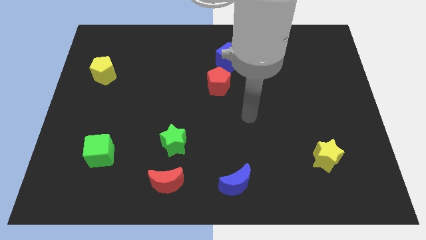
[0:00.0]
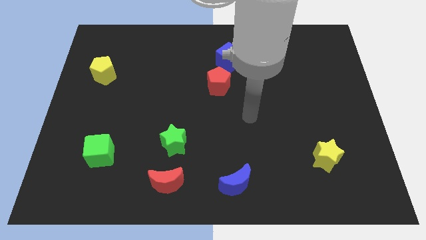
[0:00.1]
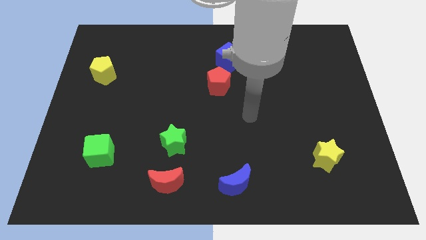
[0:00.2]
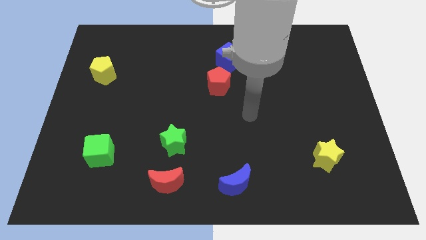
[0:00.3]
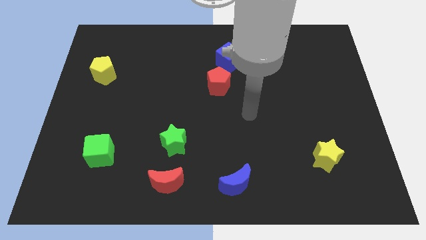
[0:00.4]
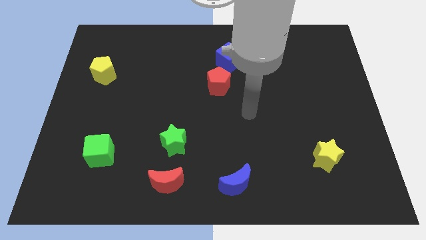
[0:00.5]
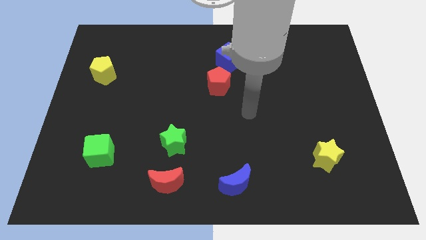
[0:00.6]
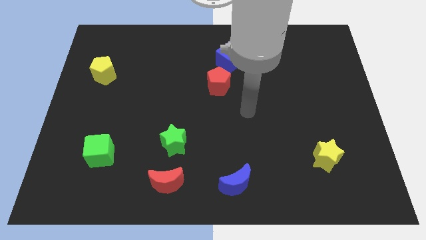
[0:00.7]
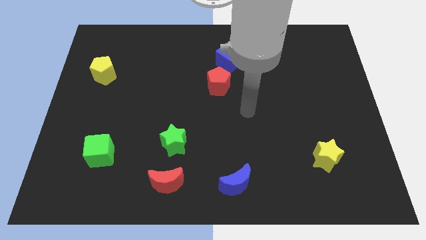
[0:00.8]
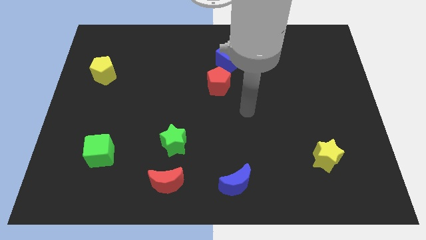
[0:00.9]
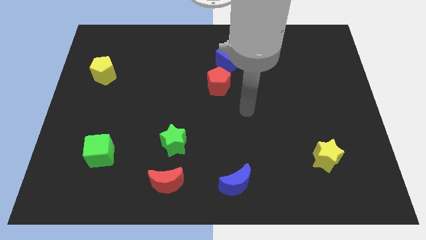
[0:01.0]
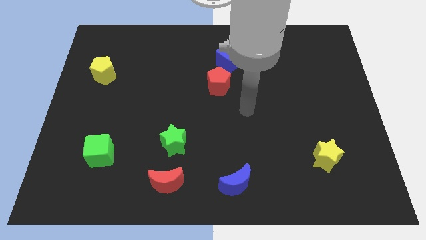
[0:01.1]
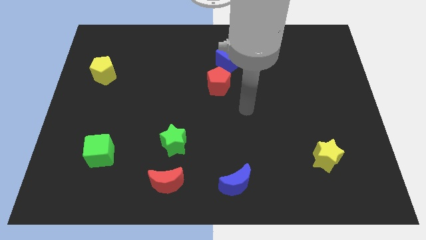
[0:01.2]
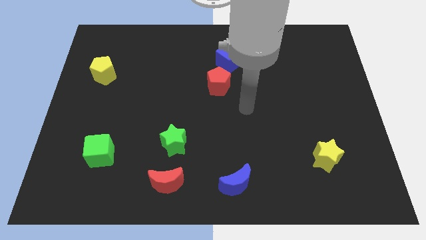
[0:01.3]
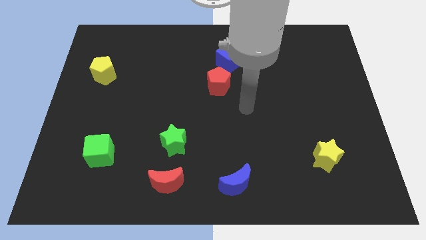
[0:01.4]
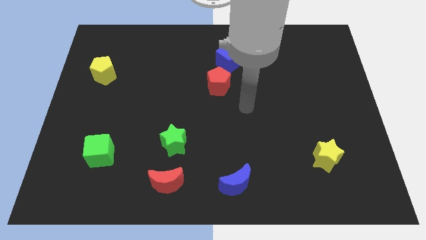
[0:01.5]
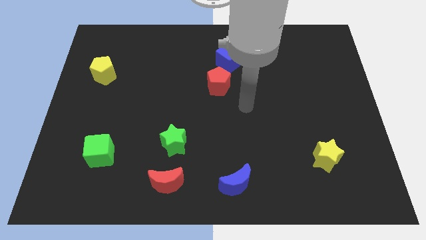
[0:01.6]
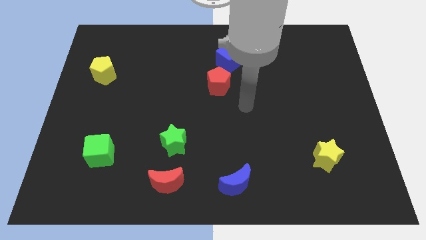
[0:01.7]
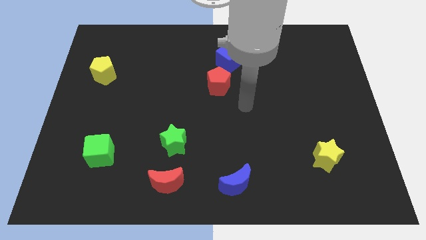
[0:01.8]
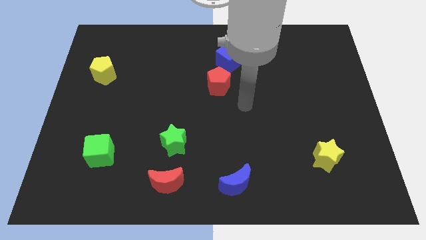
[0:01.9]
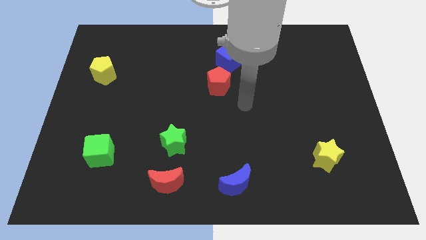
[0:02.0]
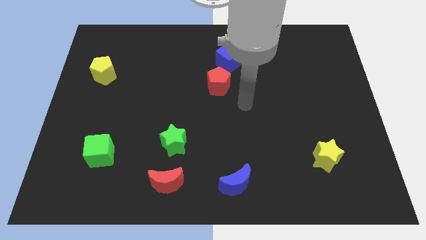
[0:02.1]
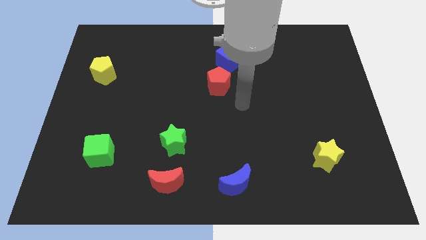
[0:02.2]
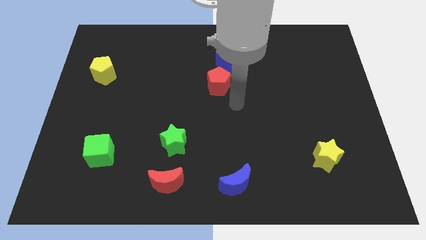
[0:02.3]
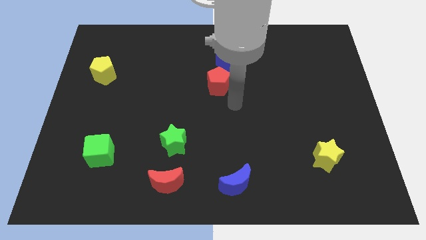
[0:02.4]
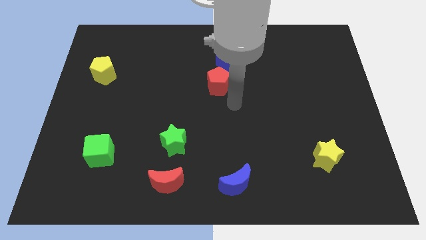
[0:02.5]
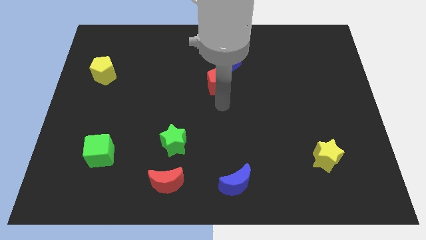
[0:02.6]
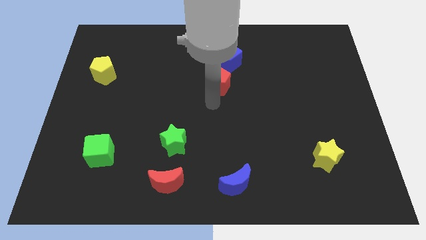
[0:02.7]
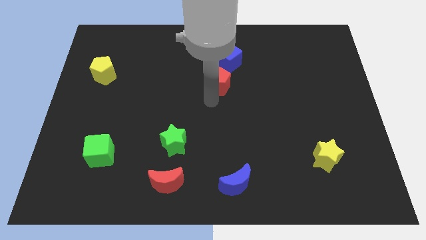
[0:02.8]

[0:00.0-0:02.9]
point your arm at the bottom of the red pentagon

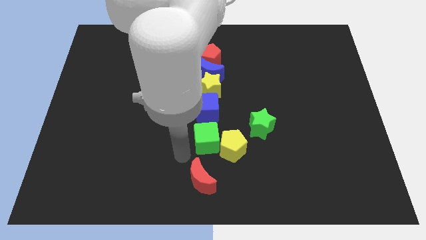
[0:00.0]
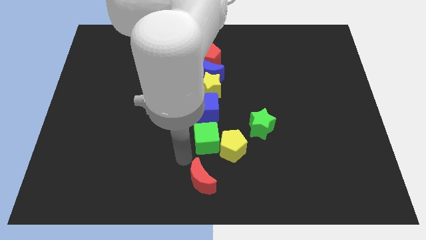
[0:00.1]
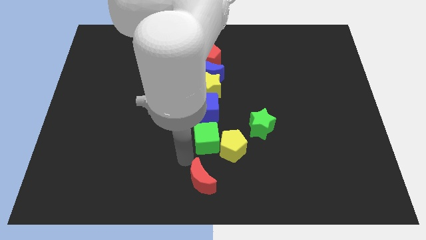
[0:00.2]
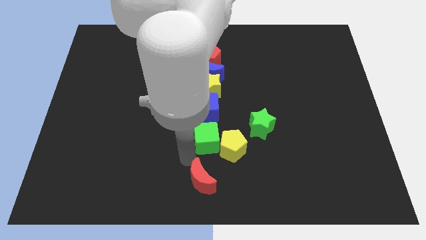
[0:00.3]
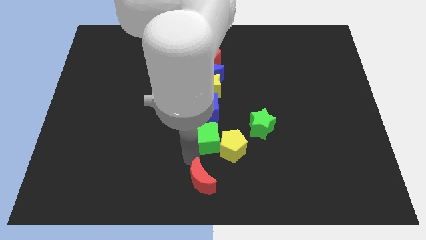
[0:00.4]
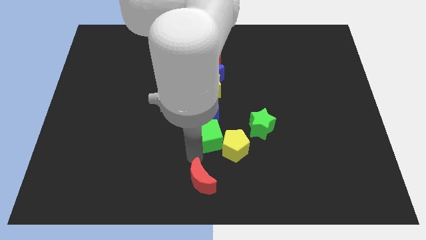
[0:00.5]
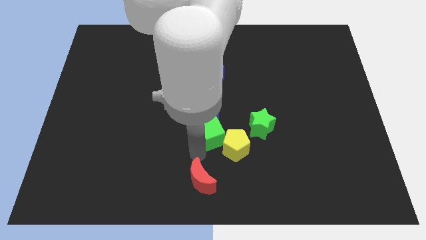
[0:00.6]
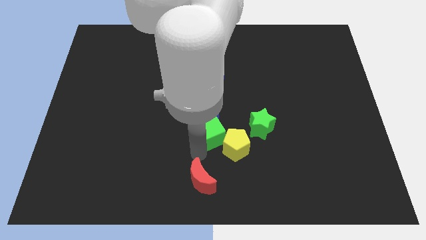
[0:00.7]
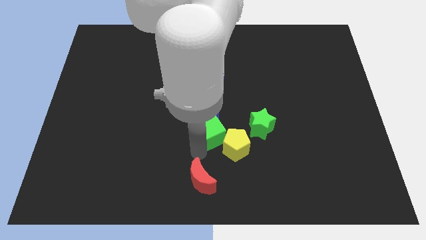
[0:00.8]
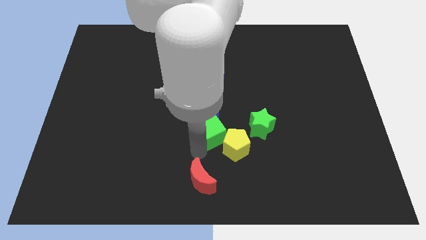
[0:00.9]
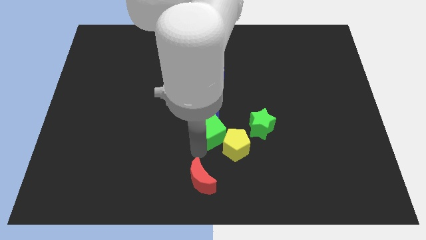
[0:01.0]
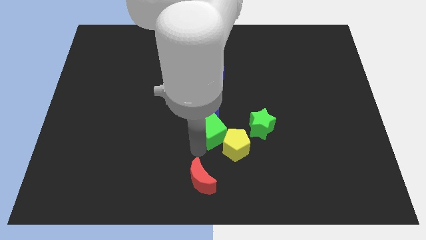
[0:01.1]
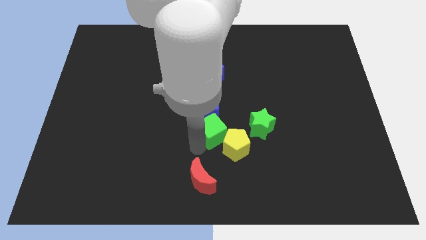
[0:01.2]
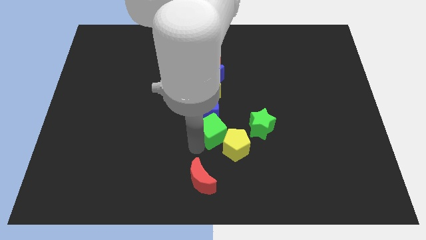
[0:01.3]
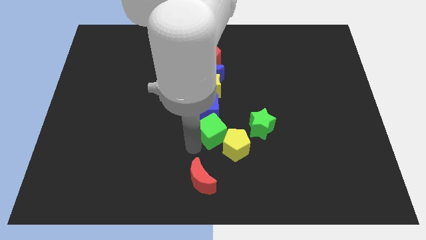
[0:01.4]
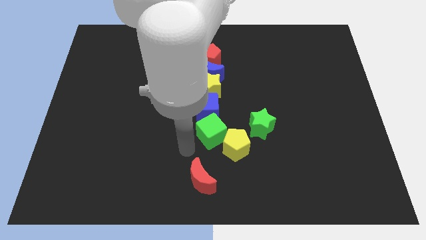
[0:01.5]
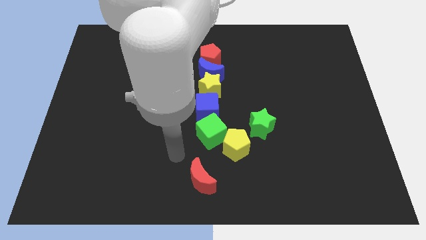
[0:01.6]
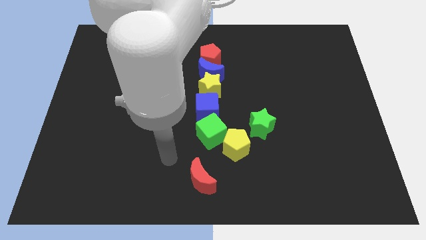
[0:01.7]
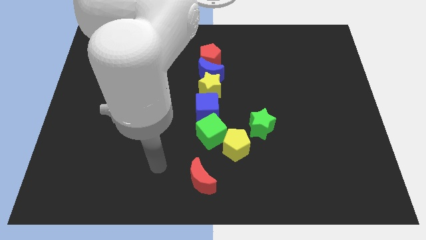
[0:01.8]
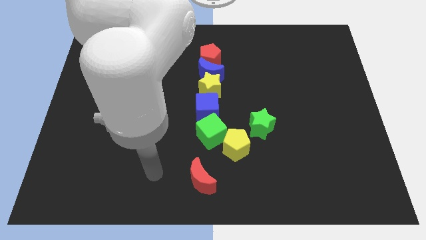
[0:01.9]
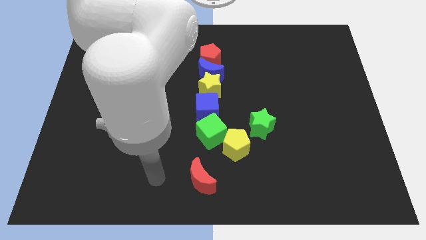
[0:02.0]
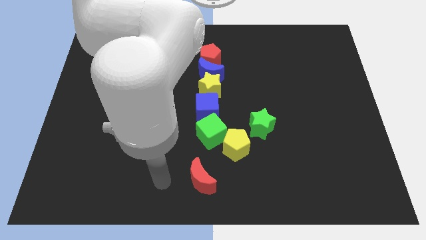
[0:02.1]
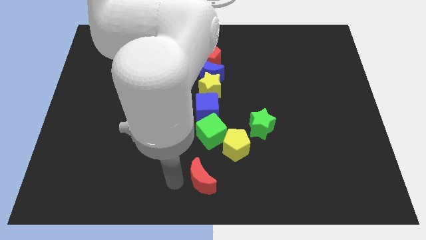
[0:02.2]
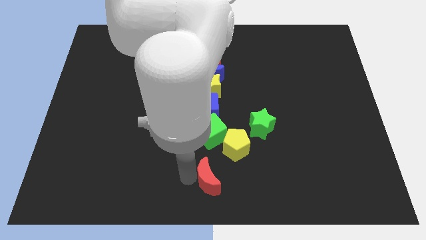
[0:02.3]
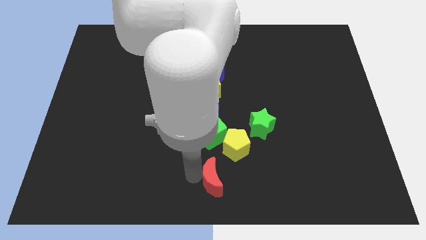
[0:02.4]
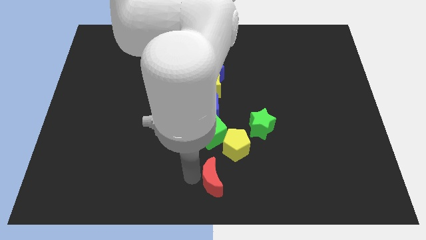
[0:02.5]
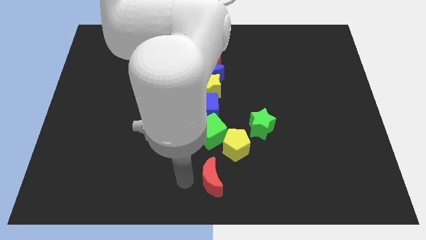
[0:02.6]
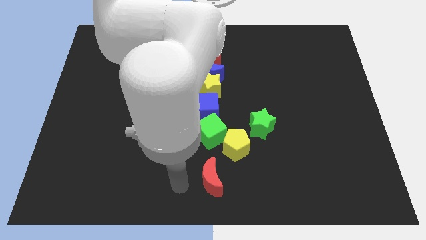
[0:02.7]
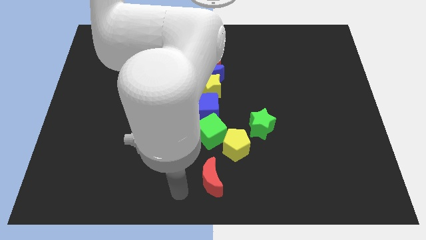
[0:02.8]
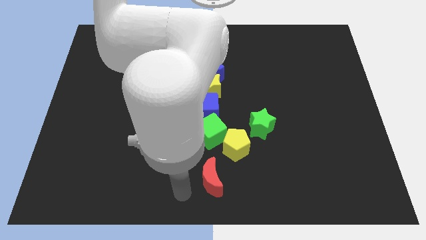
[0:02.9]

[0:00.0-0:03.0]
make the green cube to touch the bottom side of the blue cube

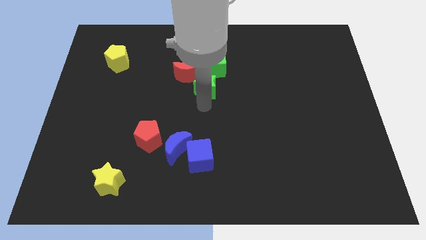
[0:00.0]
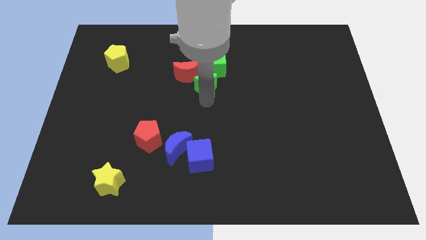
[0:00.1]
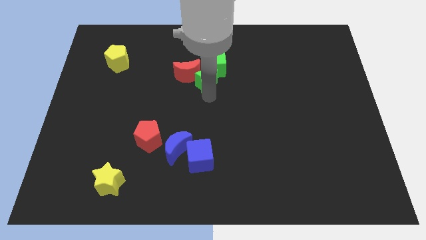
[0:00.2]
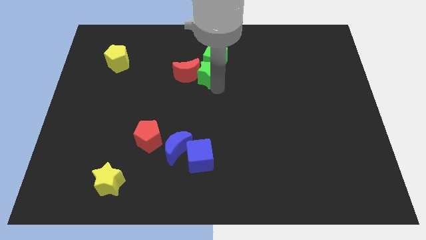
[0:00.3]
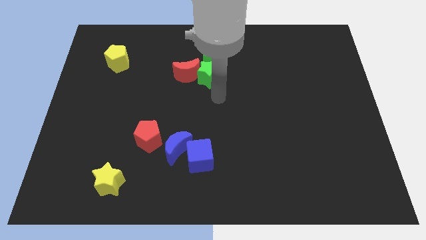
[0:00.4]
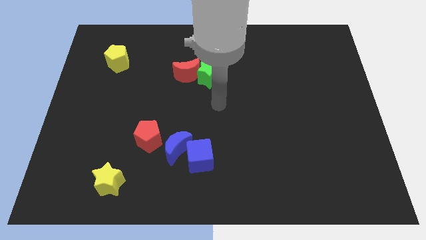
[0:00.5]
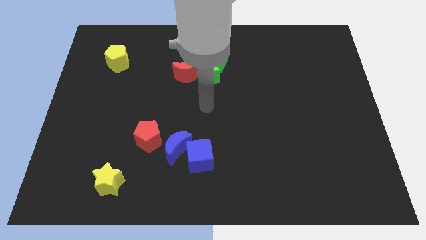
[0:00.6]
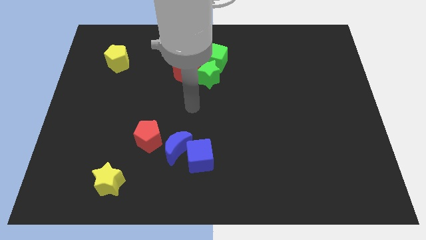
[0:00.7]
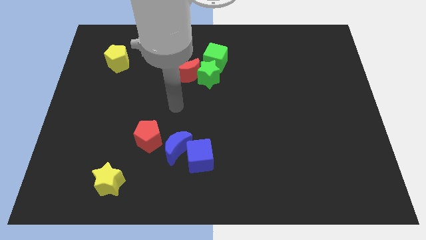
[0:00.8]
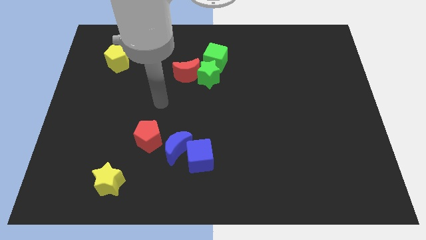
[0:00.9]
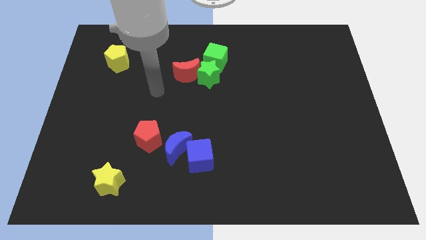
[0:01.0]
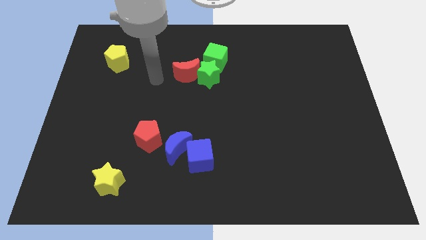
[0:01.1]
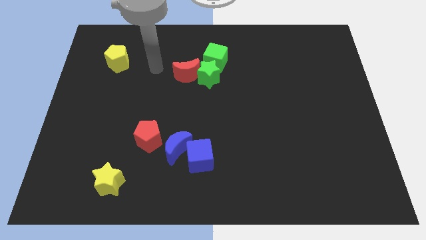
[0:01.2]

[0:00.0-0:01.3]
place the green star right to the red crescent

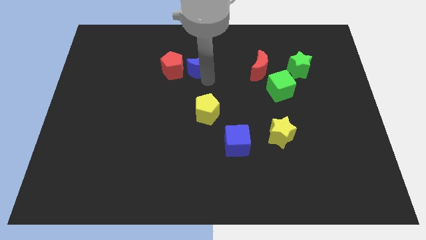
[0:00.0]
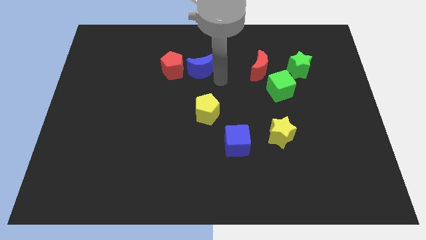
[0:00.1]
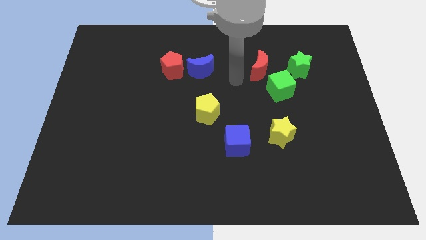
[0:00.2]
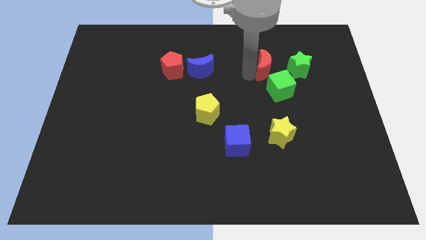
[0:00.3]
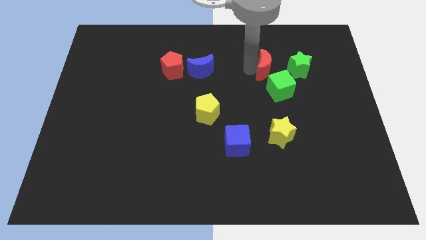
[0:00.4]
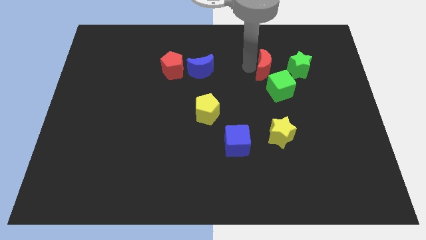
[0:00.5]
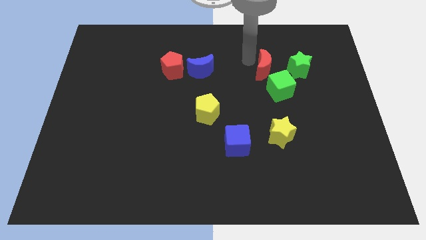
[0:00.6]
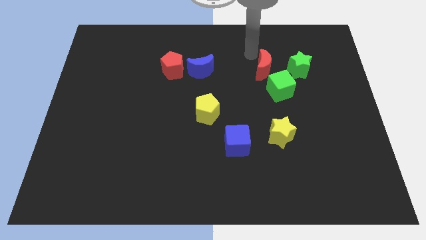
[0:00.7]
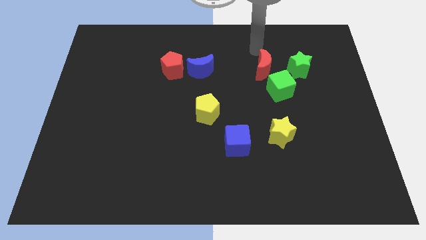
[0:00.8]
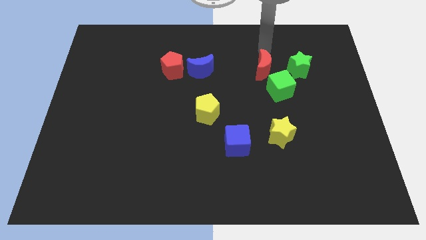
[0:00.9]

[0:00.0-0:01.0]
move your arm to the top of the red crescent

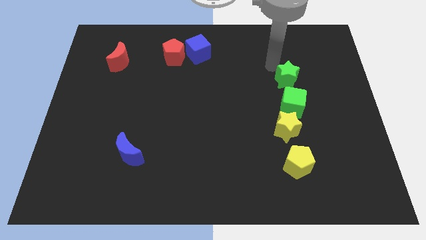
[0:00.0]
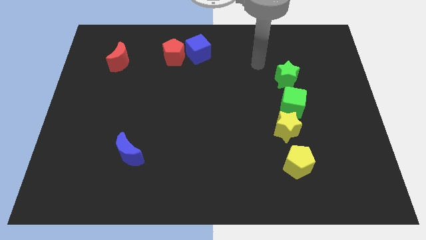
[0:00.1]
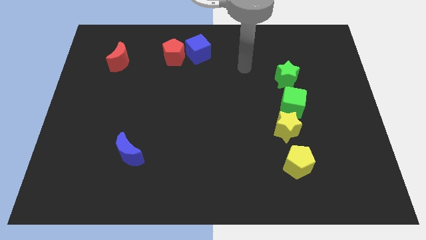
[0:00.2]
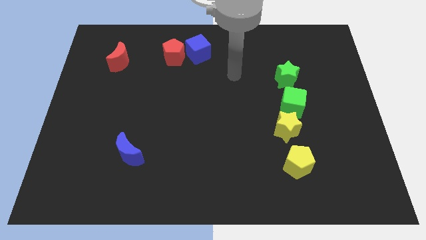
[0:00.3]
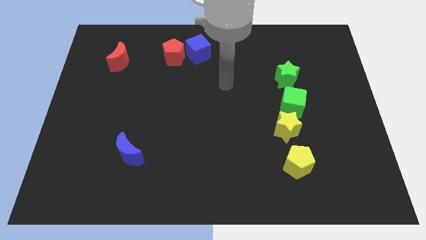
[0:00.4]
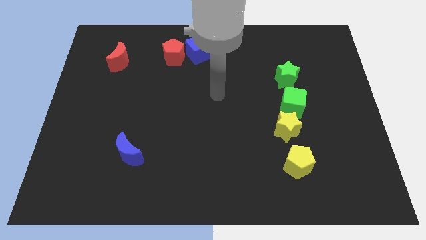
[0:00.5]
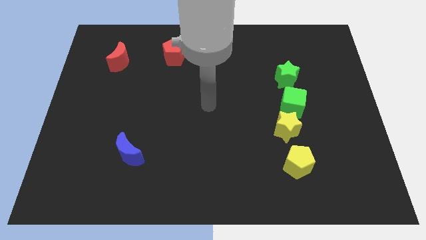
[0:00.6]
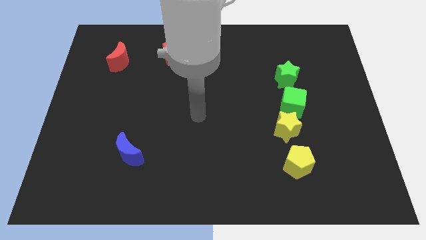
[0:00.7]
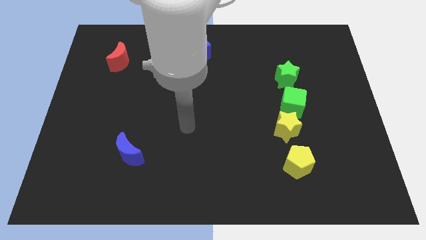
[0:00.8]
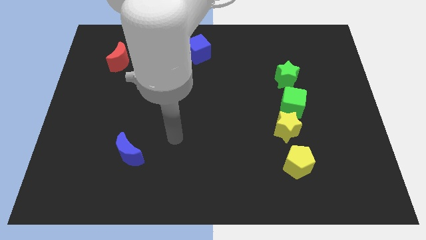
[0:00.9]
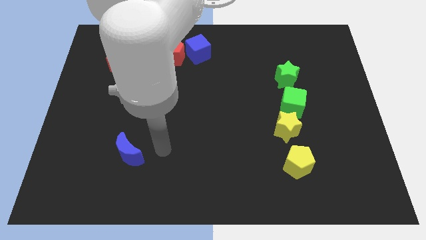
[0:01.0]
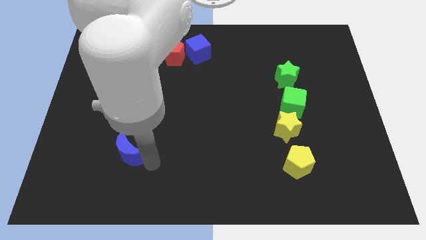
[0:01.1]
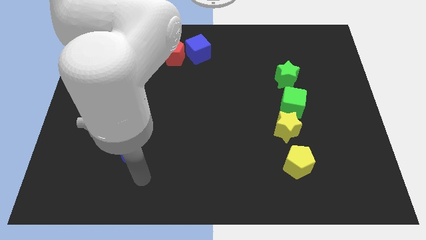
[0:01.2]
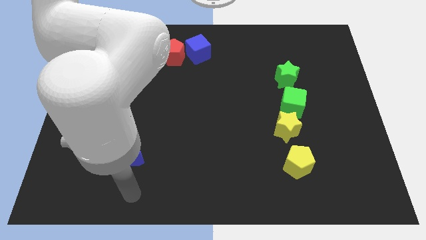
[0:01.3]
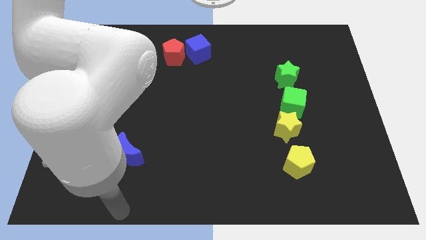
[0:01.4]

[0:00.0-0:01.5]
move your arm away from the green star
